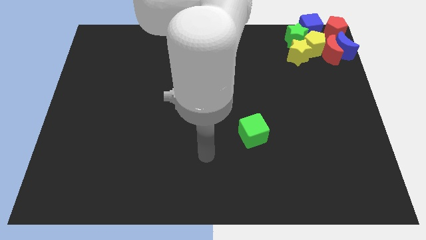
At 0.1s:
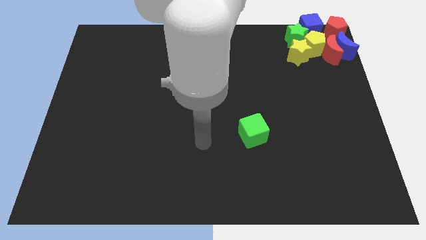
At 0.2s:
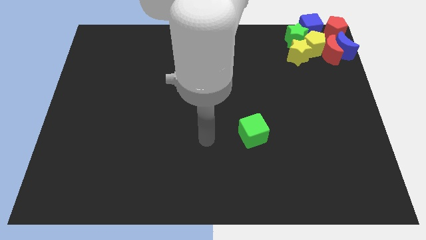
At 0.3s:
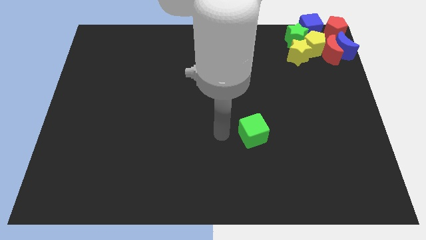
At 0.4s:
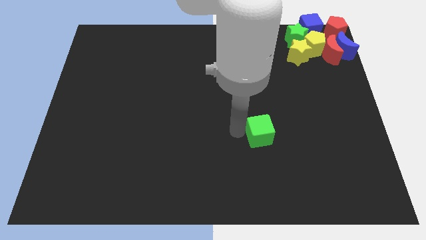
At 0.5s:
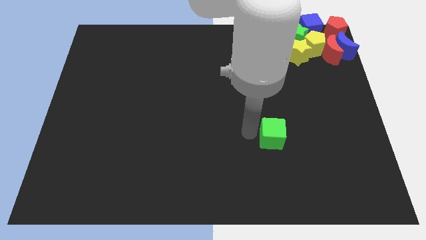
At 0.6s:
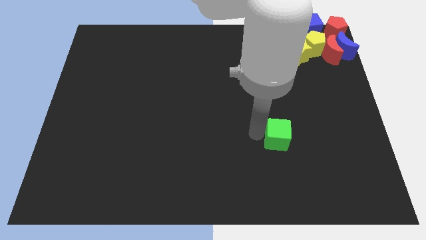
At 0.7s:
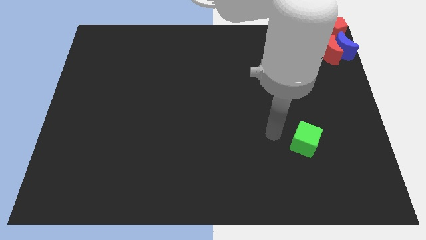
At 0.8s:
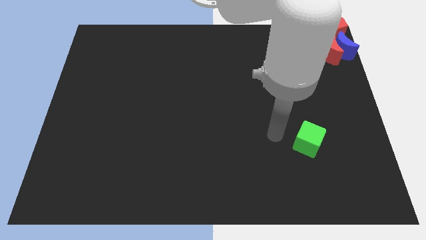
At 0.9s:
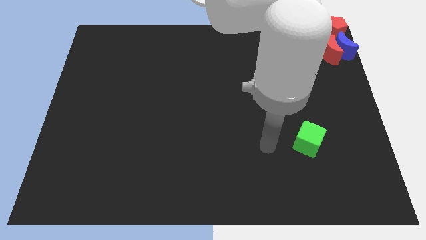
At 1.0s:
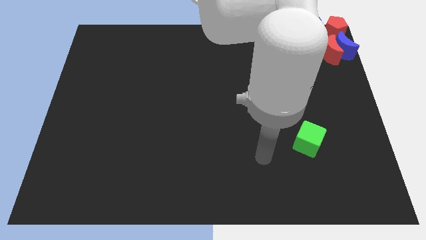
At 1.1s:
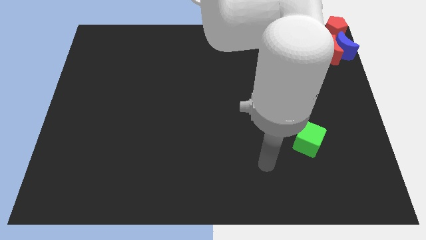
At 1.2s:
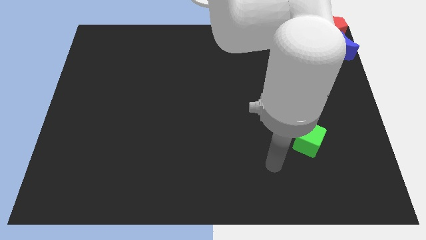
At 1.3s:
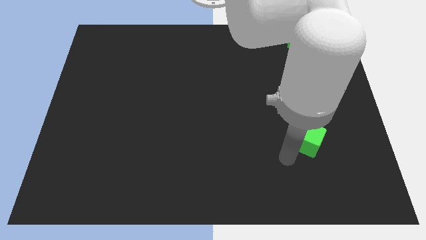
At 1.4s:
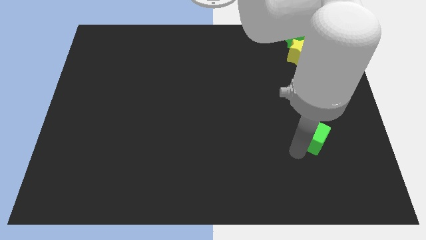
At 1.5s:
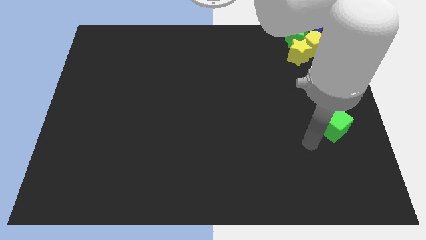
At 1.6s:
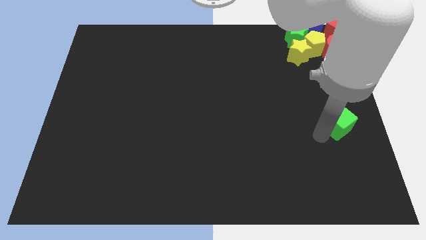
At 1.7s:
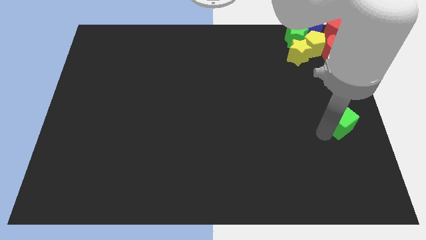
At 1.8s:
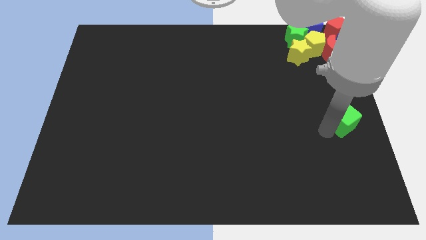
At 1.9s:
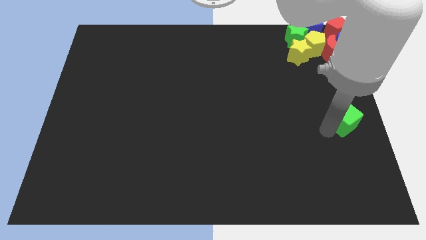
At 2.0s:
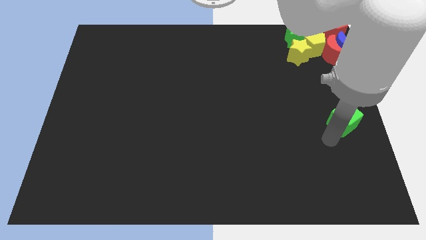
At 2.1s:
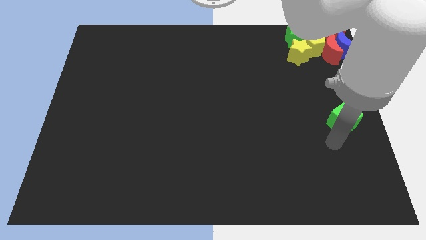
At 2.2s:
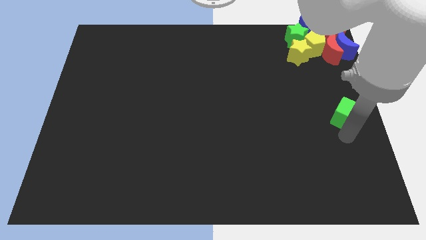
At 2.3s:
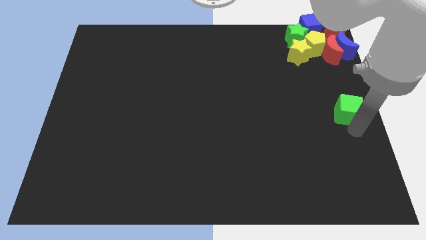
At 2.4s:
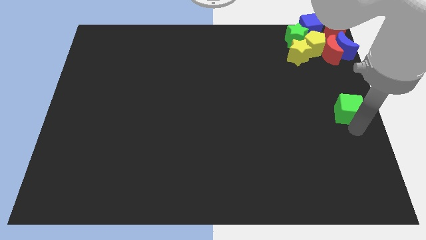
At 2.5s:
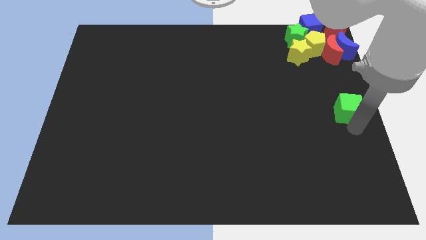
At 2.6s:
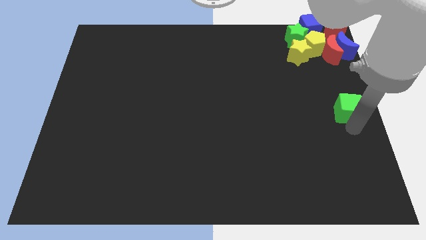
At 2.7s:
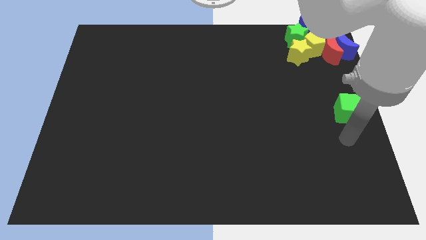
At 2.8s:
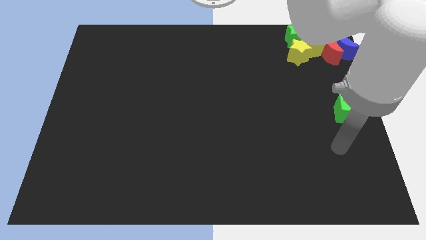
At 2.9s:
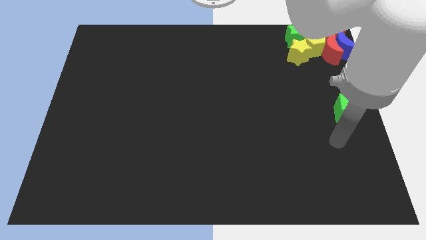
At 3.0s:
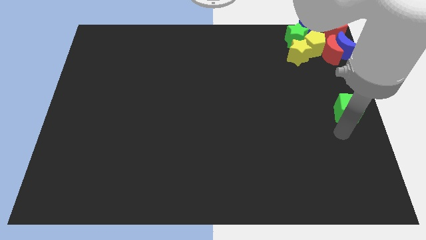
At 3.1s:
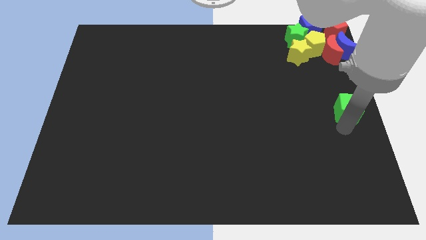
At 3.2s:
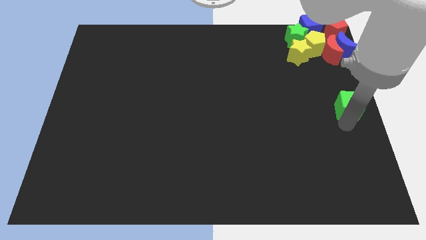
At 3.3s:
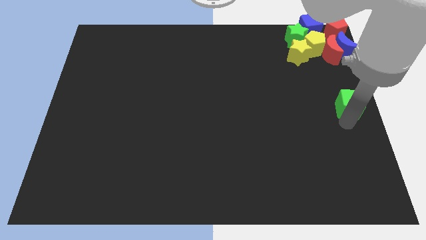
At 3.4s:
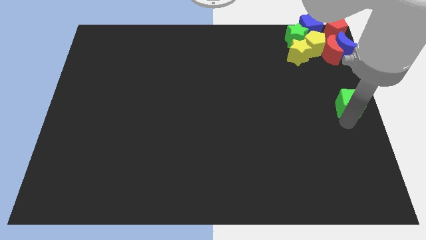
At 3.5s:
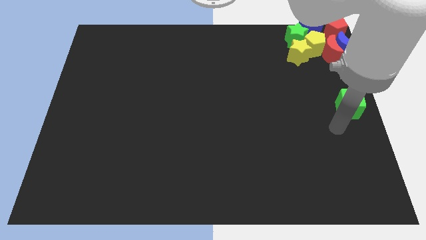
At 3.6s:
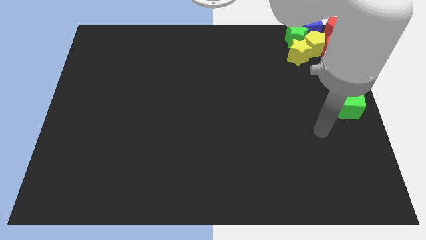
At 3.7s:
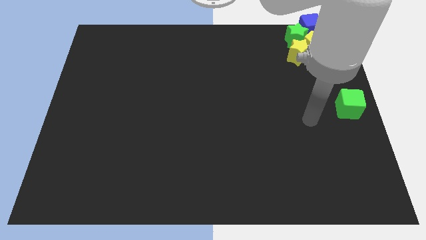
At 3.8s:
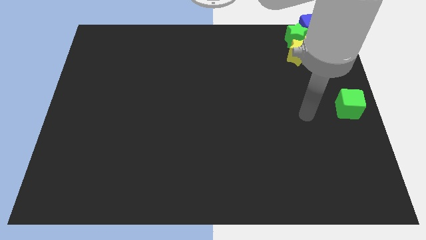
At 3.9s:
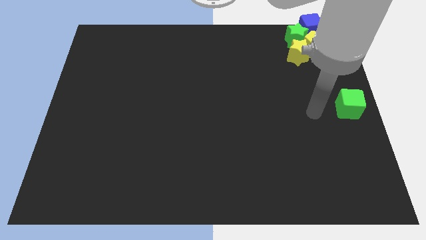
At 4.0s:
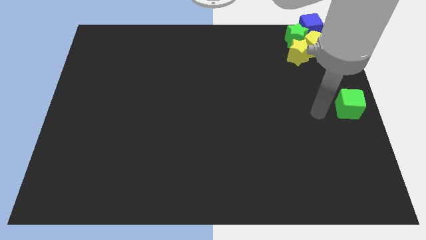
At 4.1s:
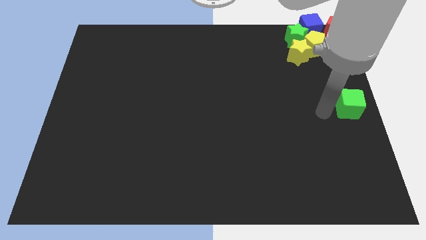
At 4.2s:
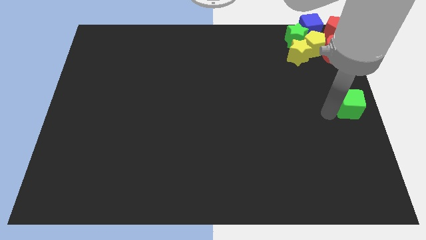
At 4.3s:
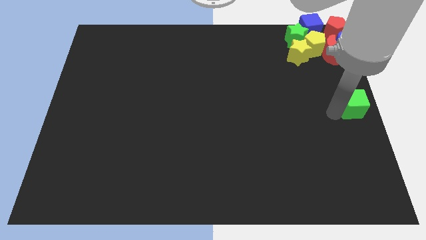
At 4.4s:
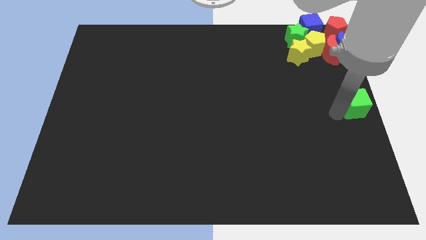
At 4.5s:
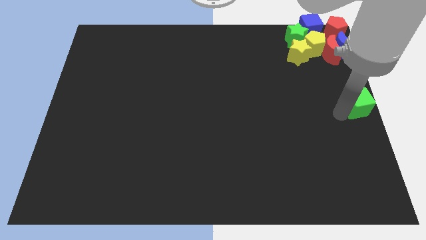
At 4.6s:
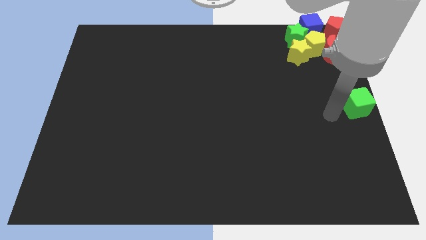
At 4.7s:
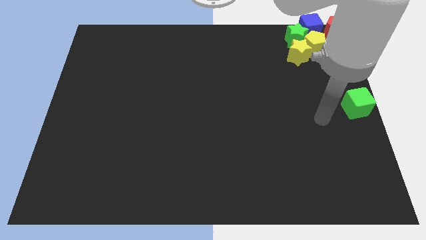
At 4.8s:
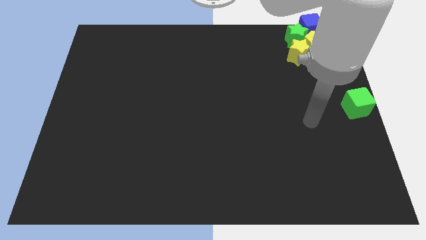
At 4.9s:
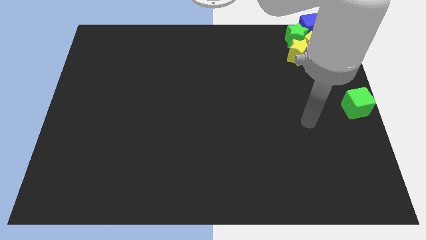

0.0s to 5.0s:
push the green cube to the left center of the board

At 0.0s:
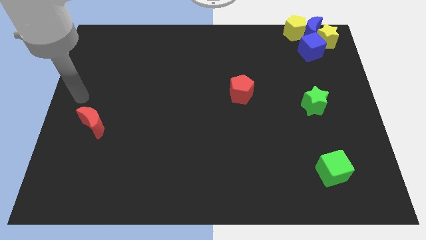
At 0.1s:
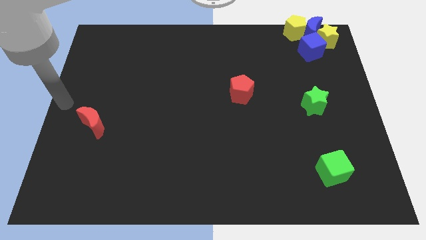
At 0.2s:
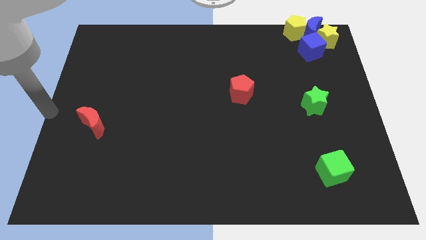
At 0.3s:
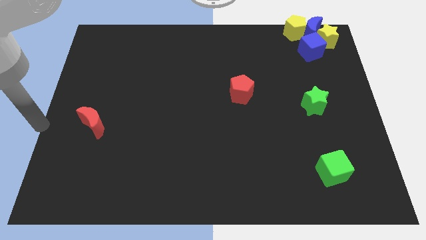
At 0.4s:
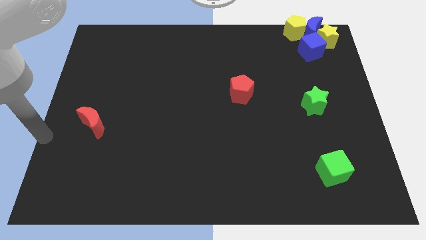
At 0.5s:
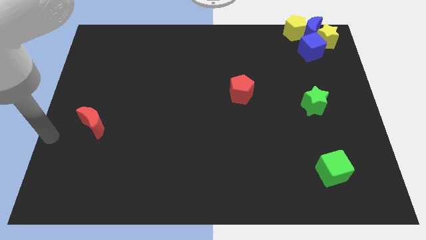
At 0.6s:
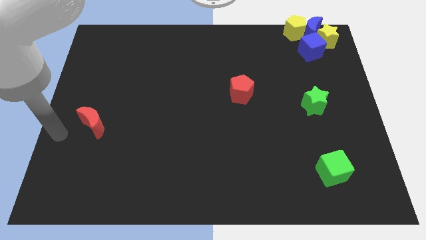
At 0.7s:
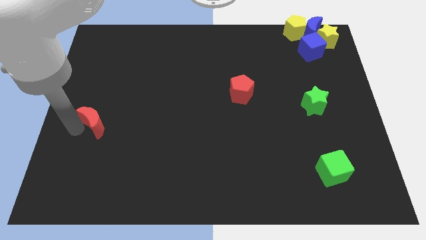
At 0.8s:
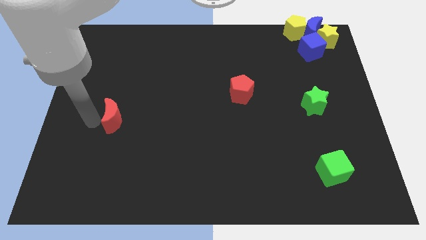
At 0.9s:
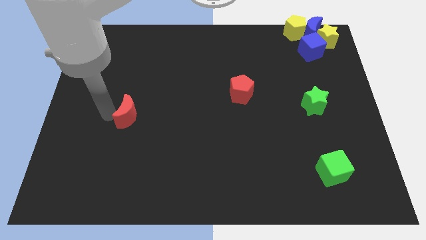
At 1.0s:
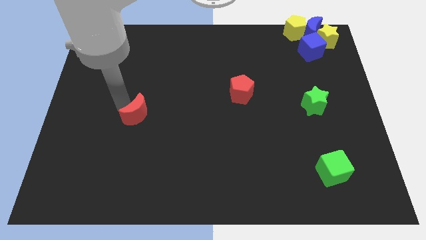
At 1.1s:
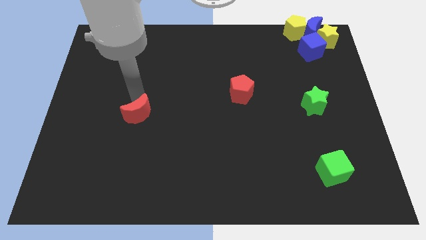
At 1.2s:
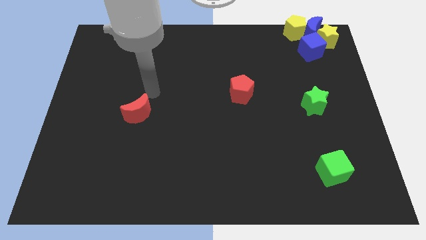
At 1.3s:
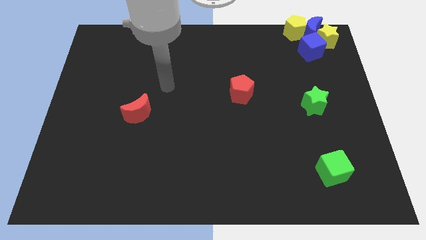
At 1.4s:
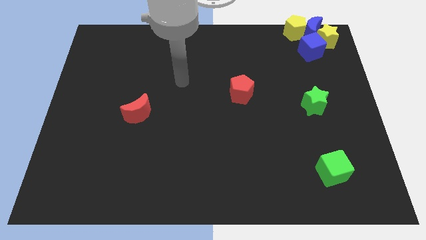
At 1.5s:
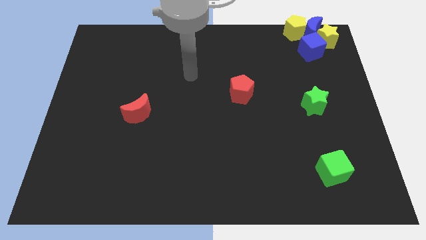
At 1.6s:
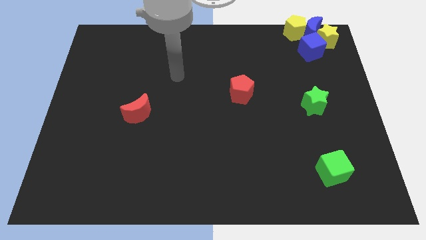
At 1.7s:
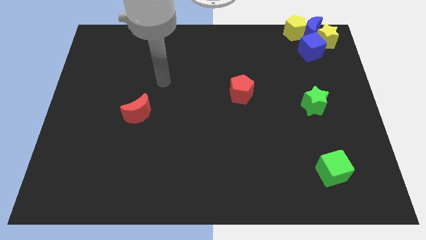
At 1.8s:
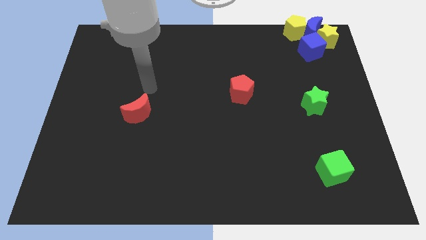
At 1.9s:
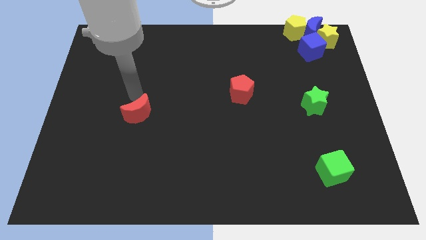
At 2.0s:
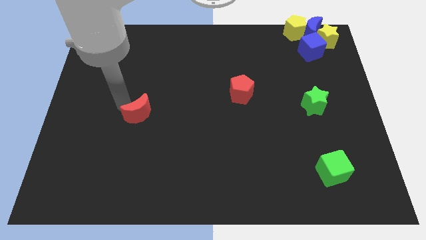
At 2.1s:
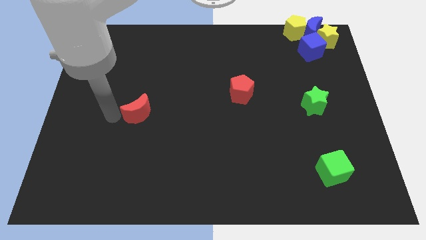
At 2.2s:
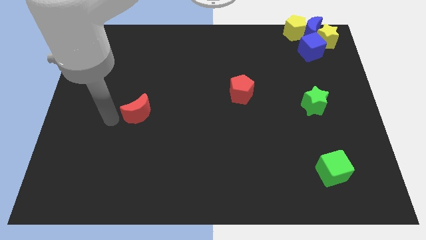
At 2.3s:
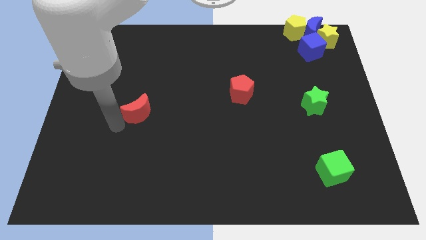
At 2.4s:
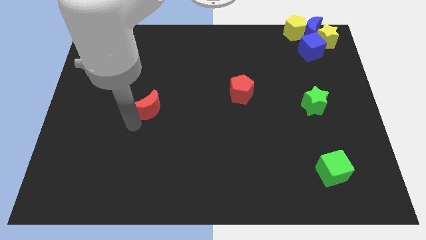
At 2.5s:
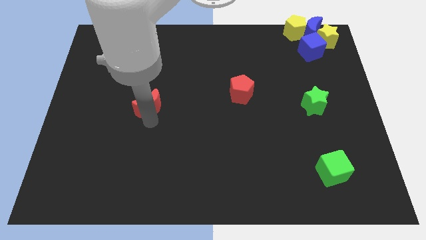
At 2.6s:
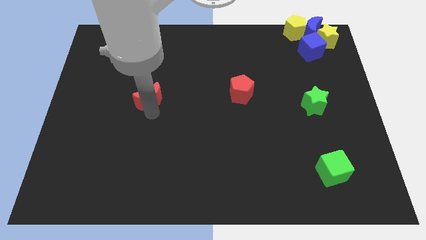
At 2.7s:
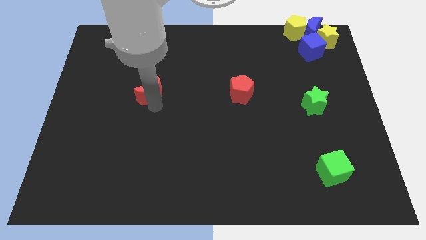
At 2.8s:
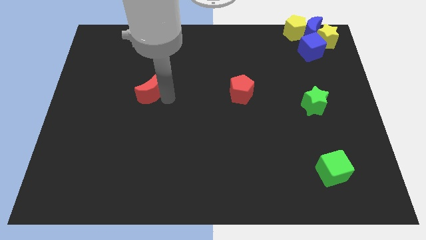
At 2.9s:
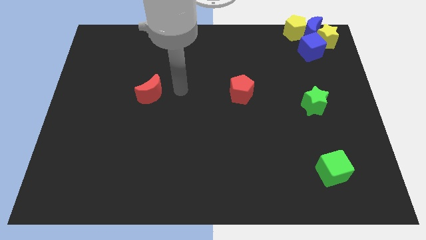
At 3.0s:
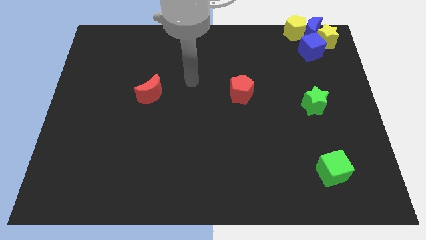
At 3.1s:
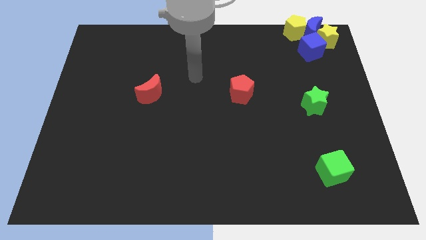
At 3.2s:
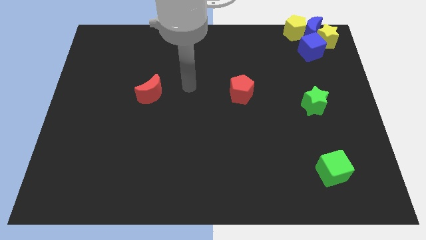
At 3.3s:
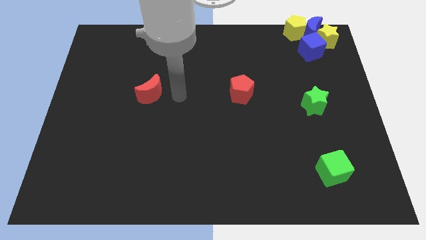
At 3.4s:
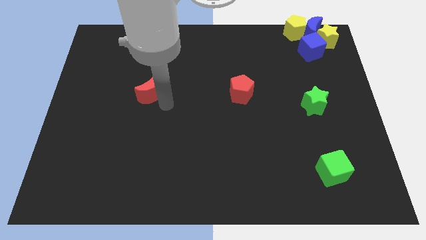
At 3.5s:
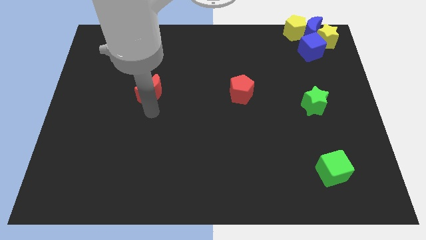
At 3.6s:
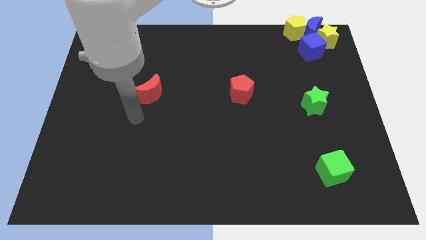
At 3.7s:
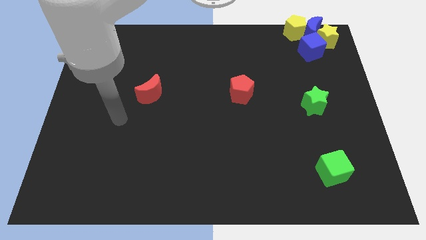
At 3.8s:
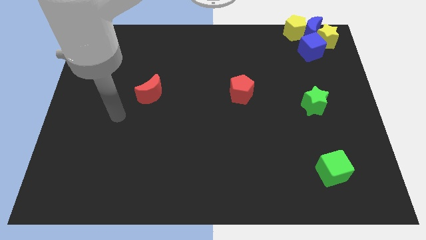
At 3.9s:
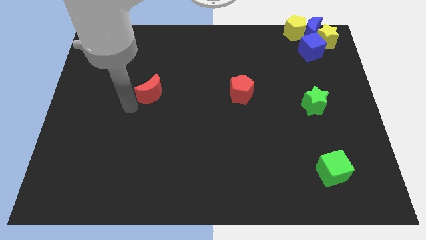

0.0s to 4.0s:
move the red moon to the left of the red pentagon
